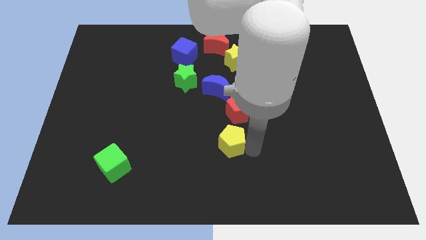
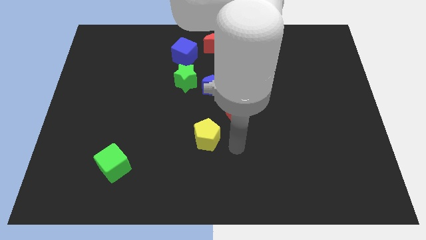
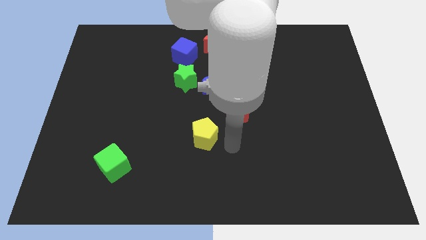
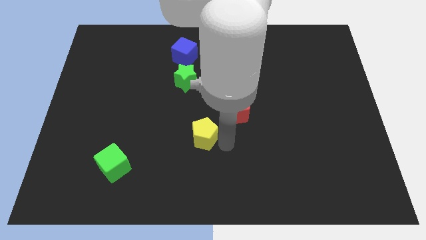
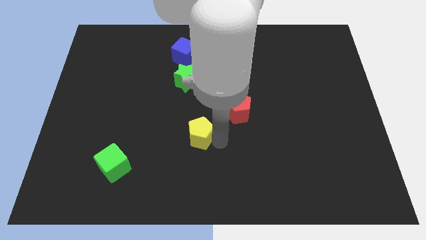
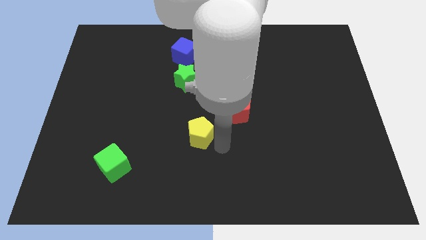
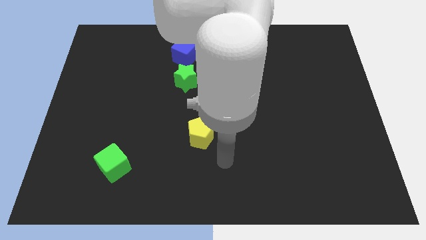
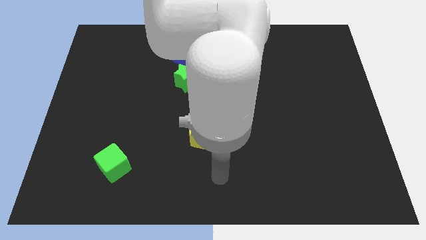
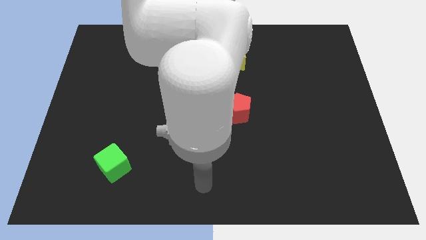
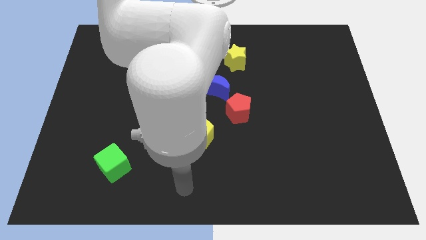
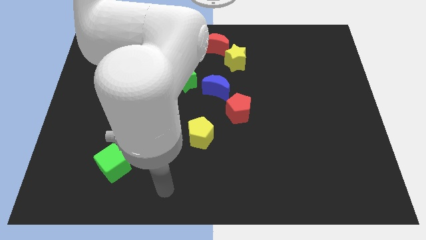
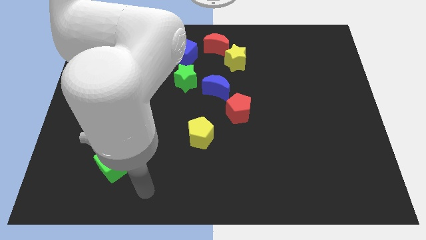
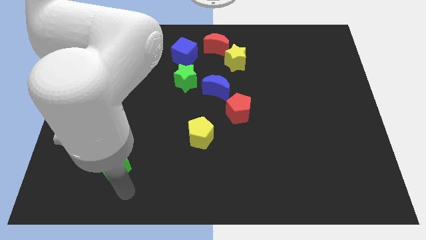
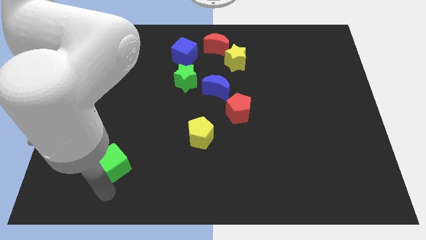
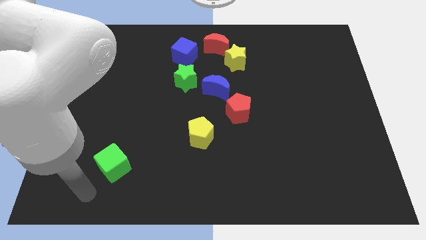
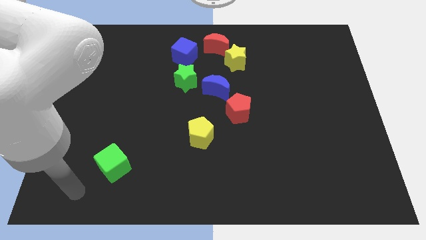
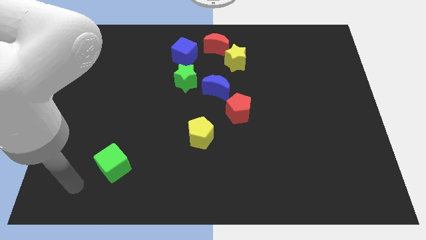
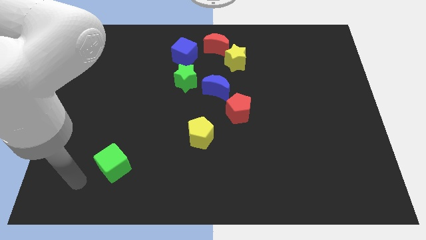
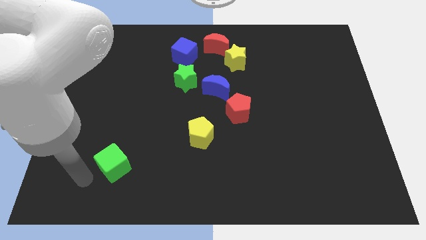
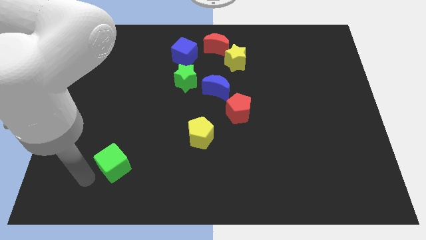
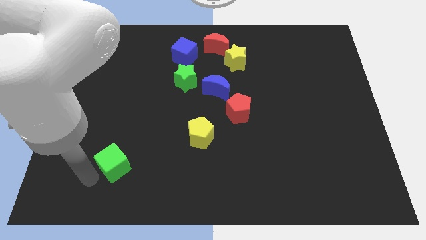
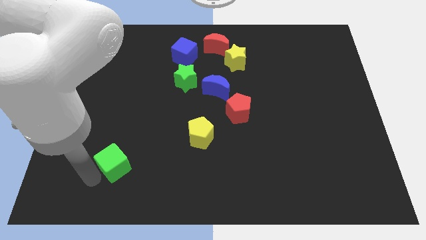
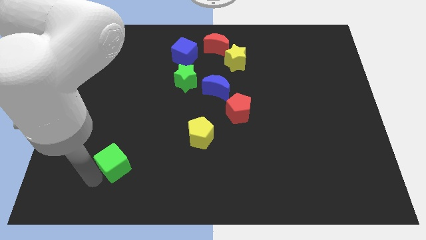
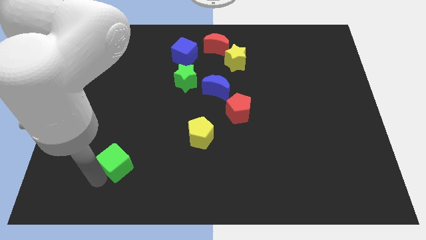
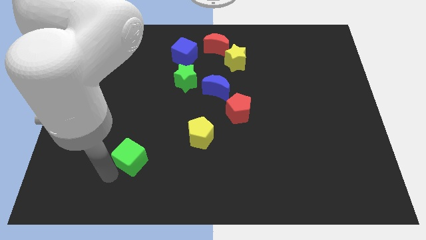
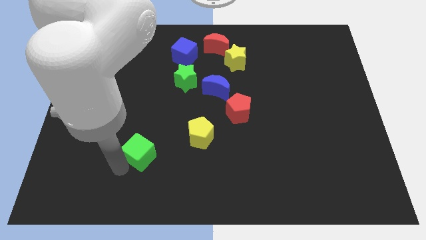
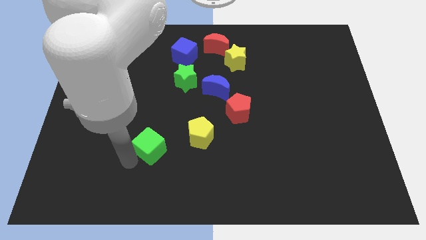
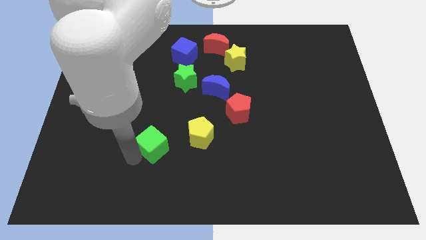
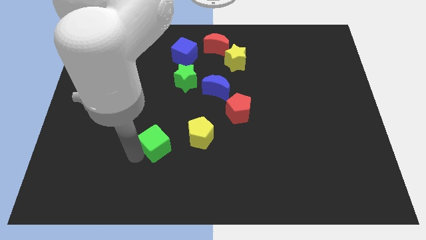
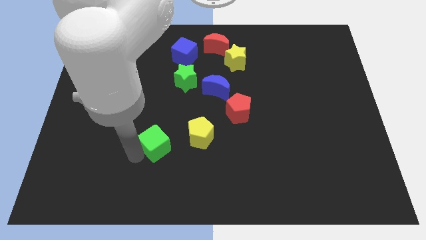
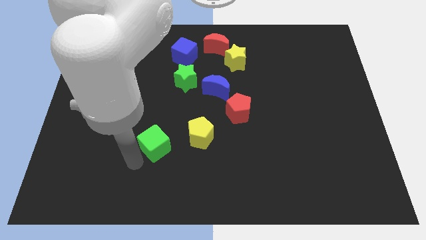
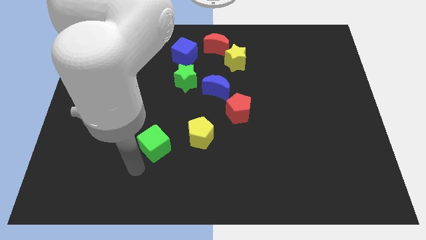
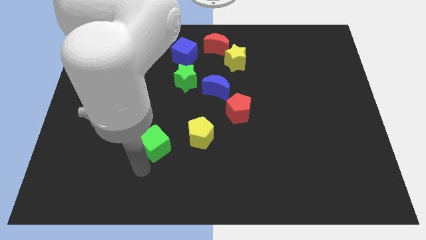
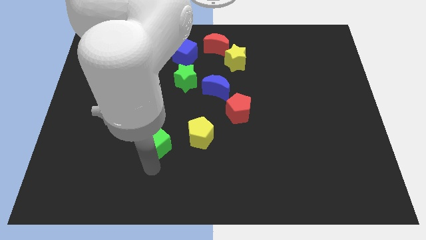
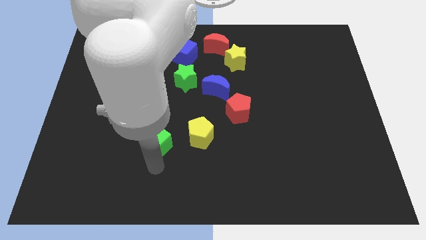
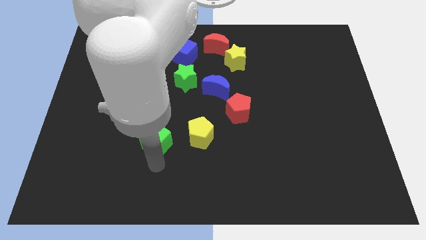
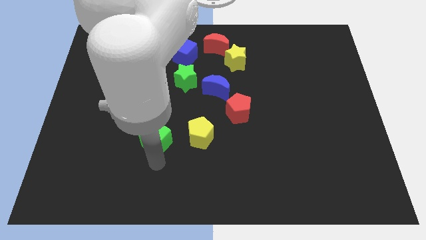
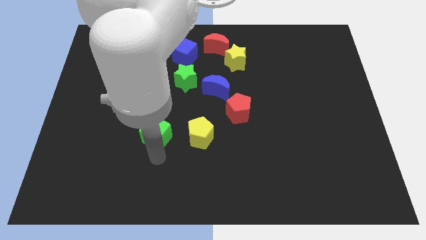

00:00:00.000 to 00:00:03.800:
place the green cube left to the yellow pentagon

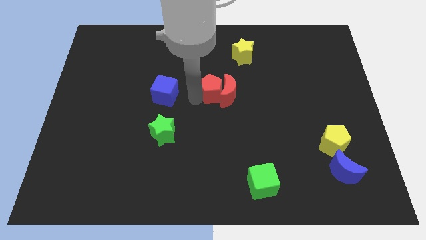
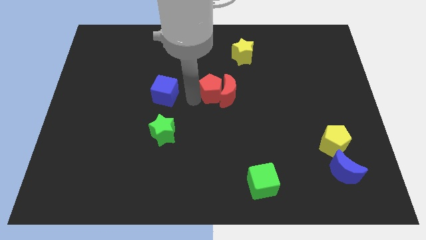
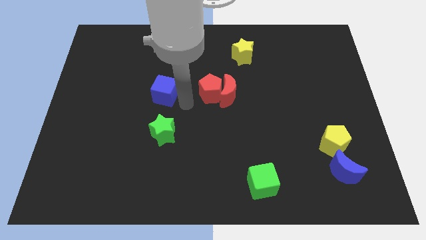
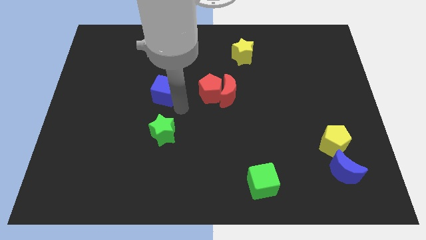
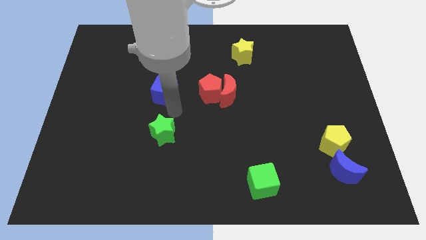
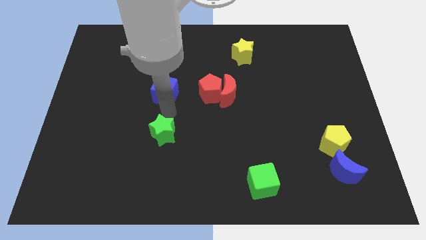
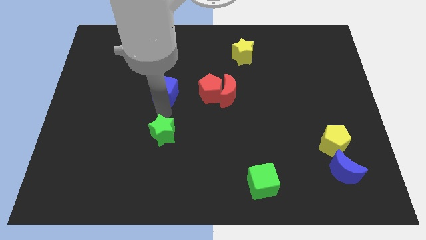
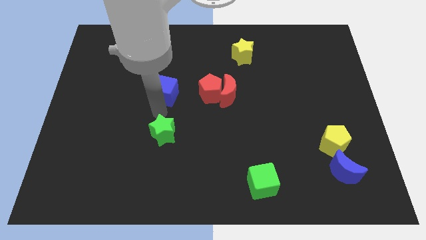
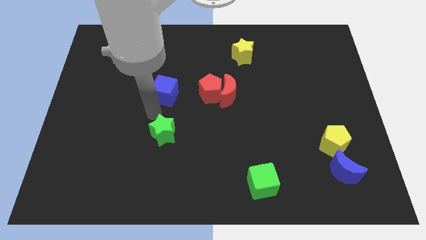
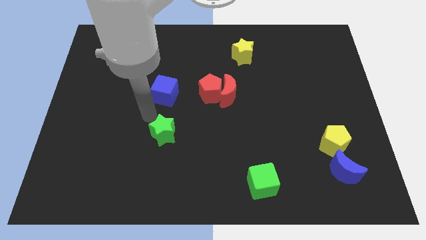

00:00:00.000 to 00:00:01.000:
place your arm to the bottom of the blue cube

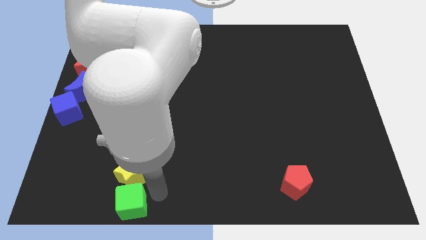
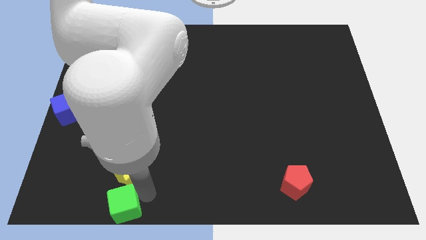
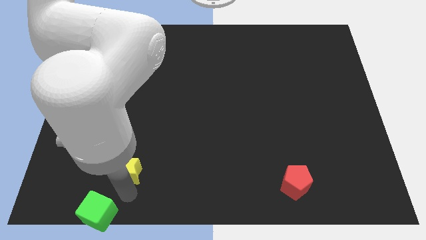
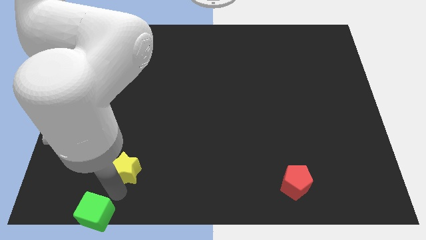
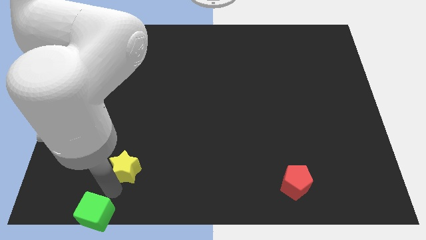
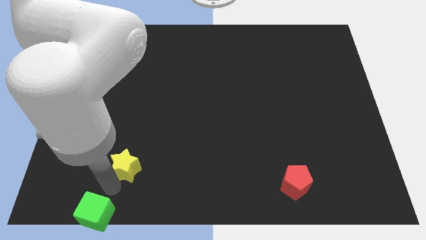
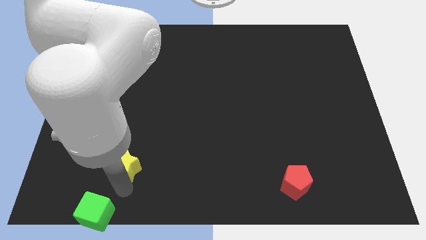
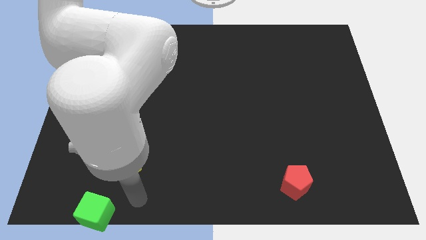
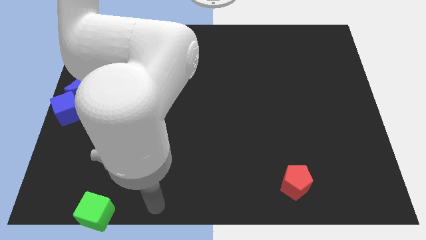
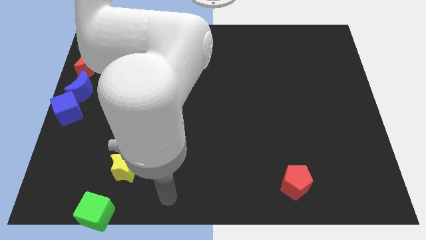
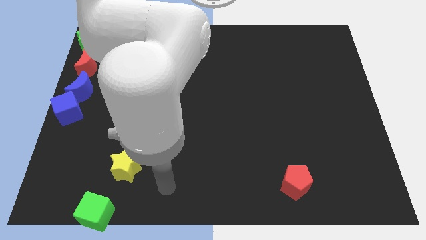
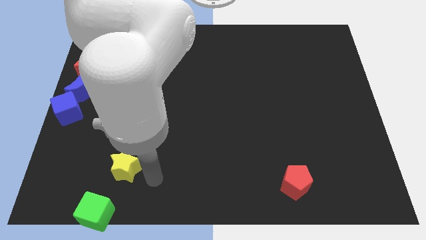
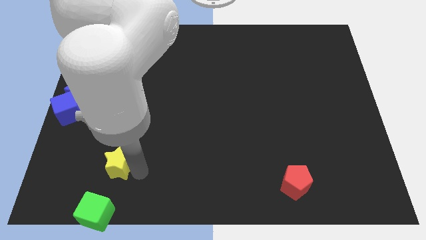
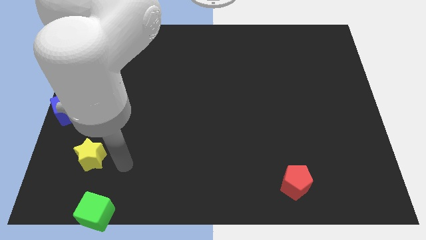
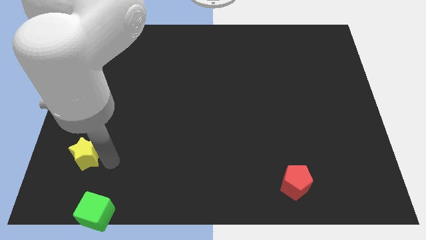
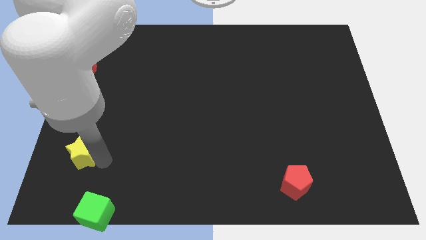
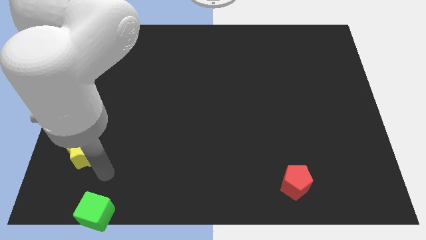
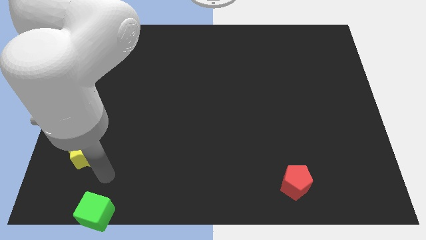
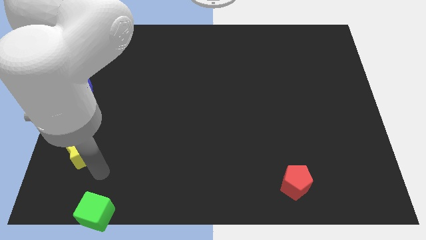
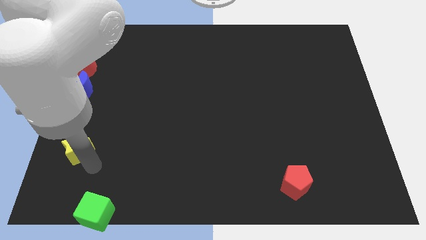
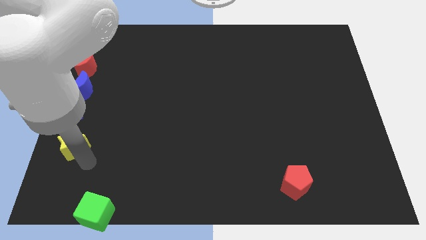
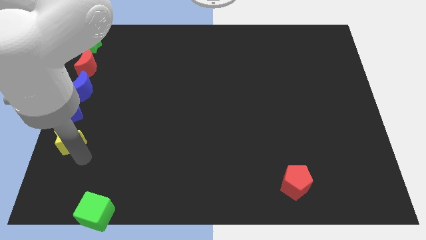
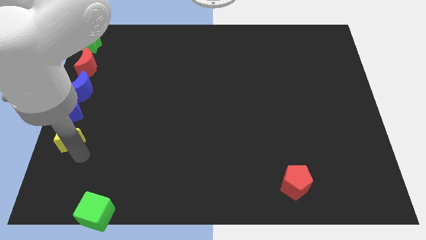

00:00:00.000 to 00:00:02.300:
move the yellow star away from the green cube

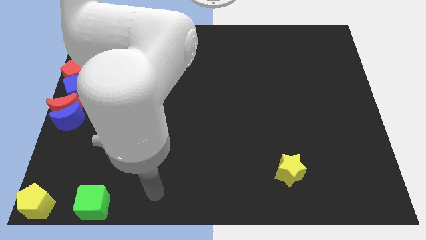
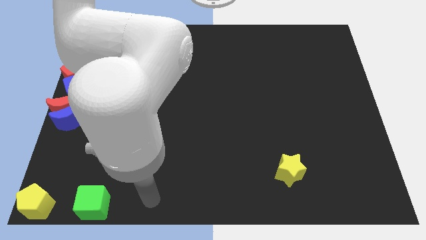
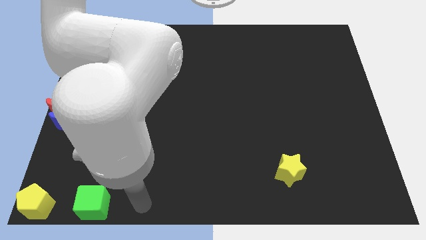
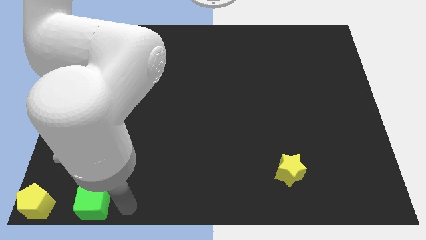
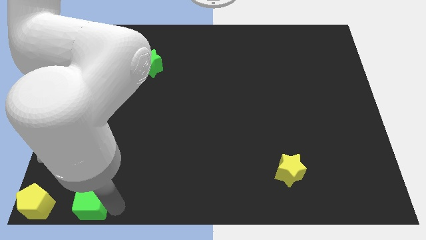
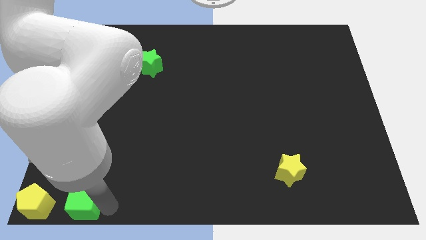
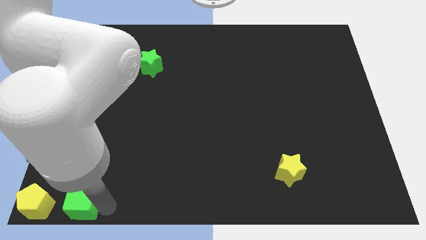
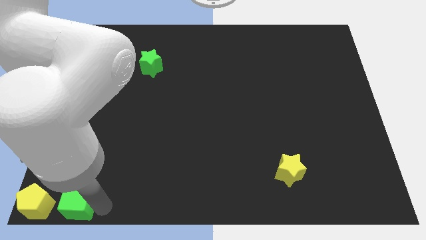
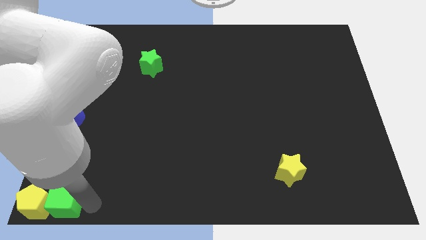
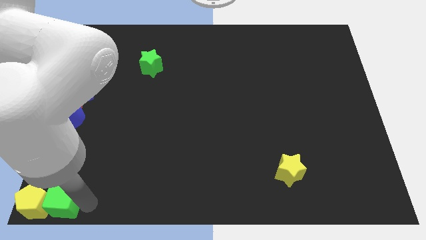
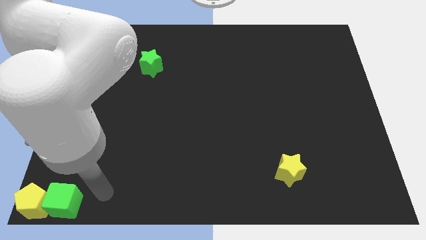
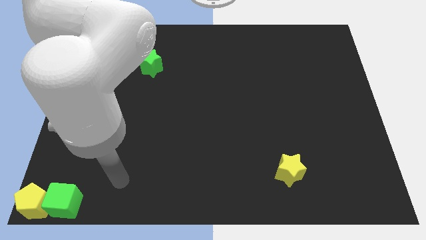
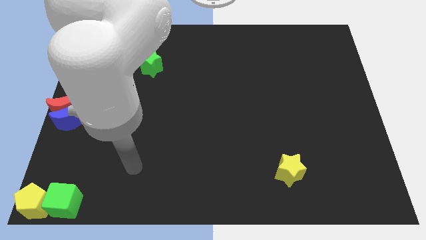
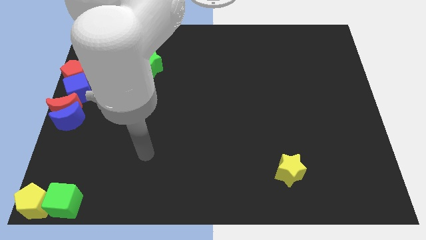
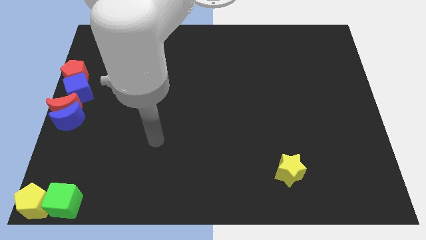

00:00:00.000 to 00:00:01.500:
move the green cube to the right side of the yellow pentagon

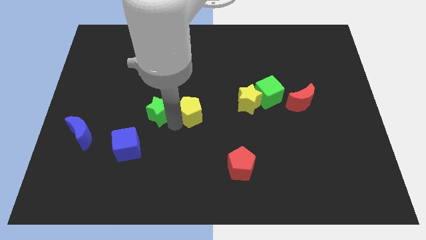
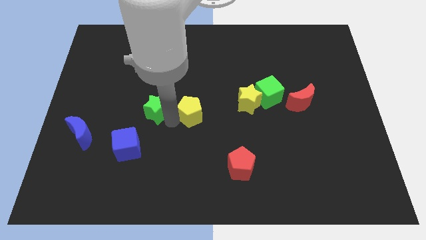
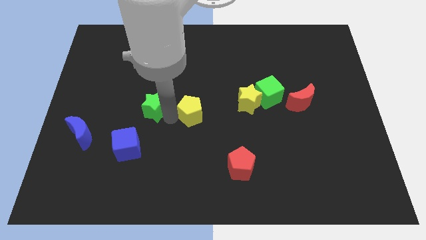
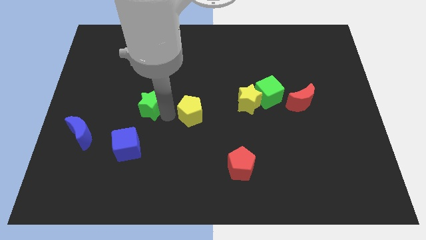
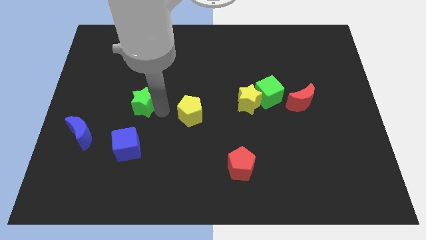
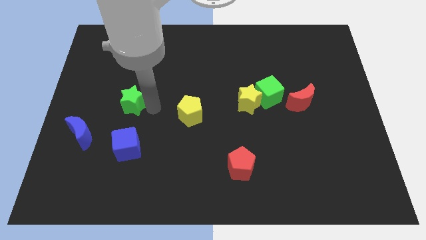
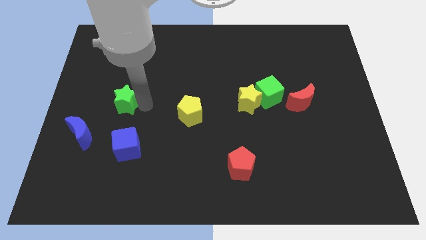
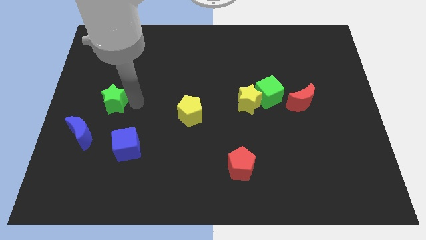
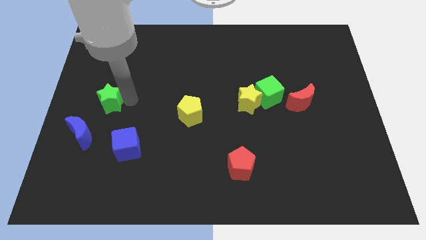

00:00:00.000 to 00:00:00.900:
place the green star above the blue blocks to form a triangle
